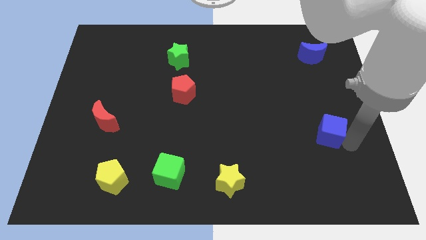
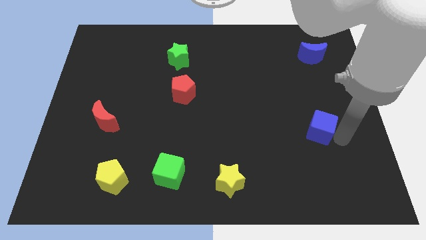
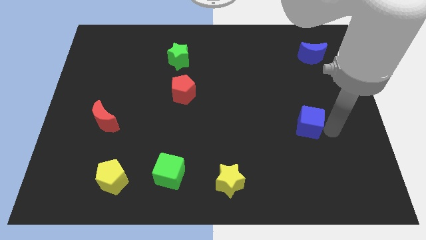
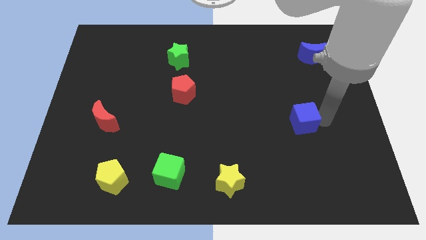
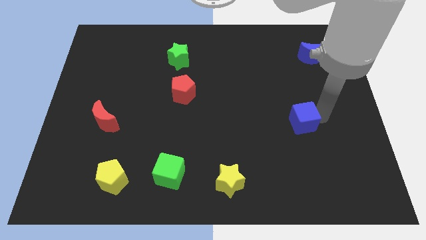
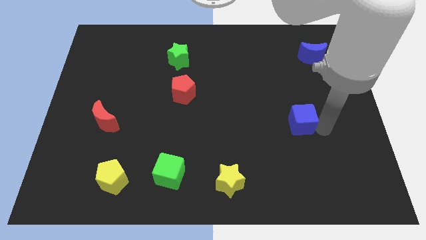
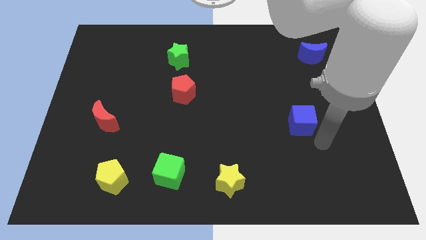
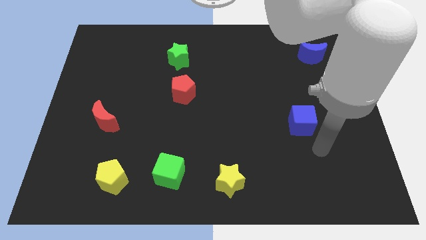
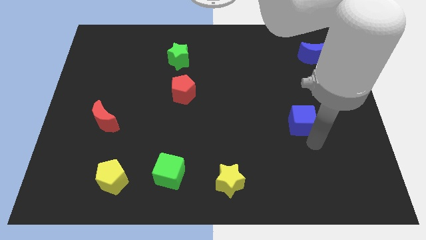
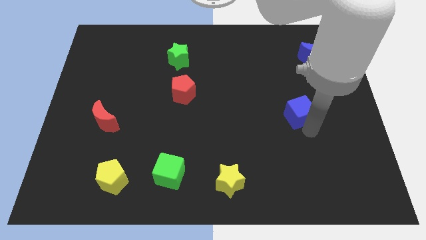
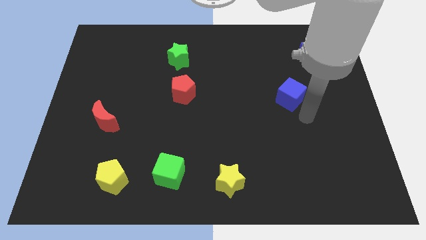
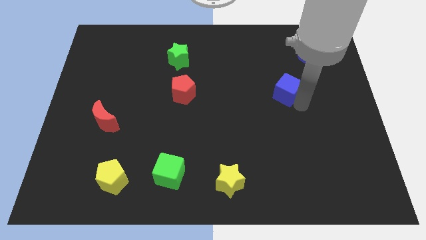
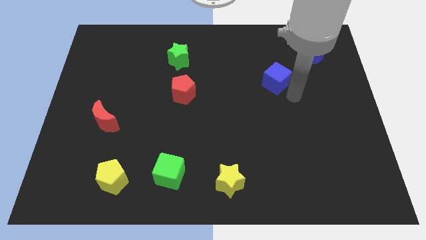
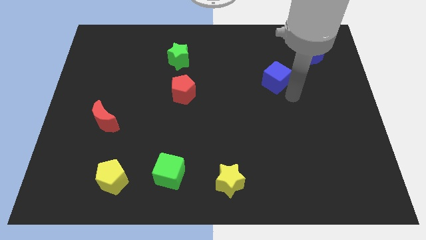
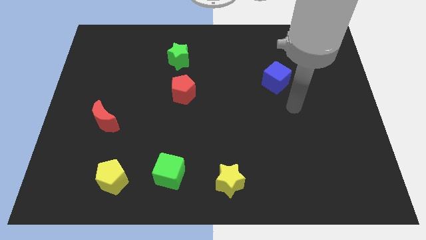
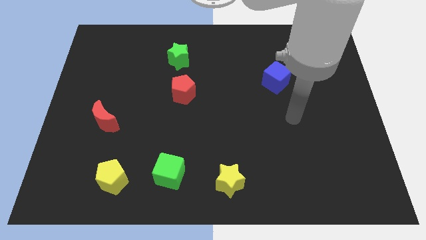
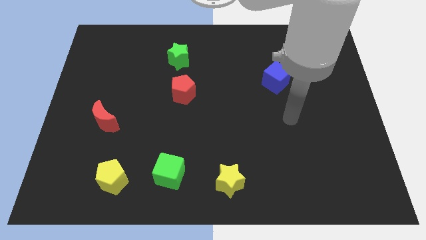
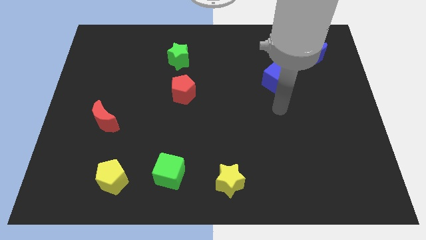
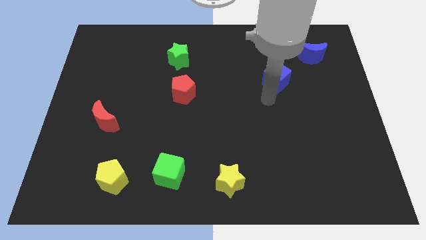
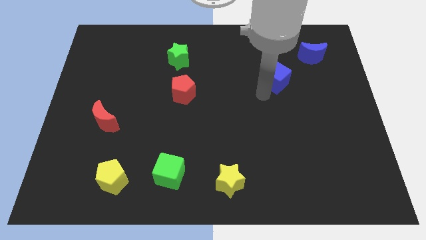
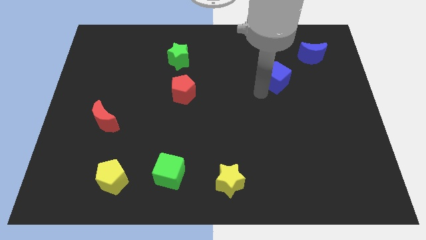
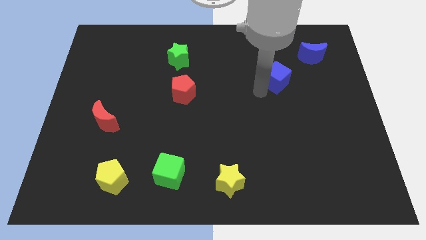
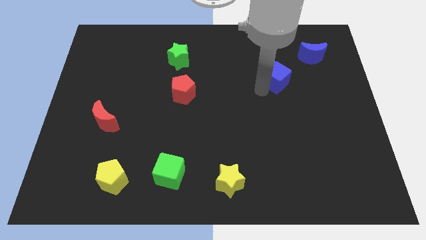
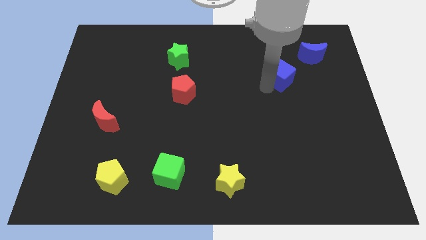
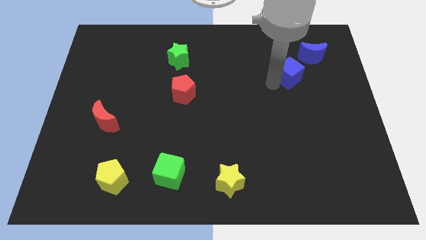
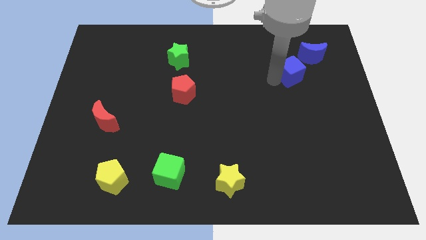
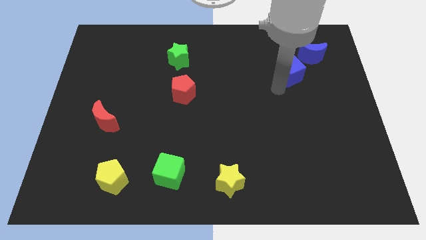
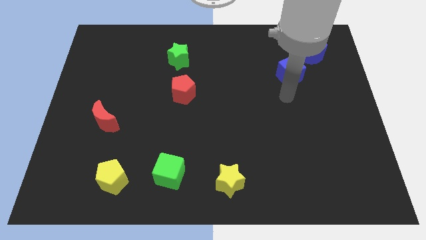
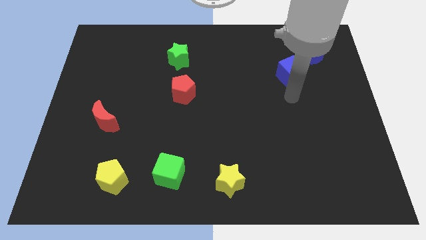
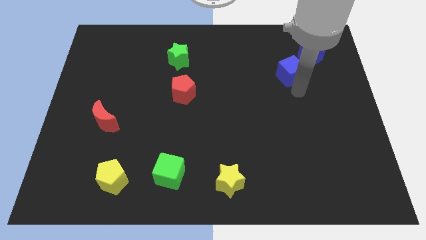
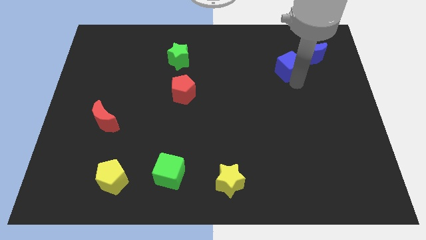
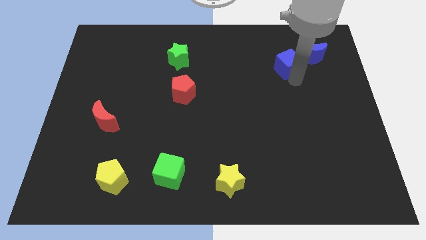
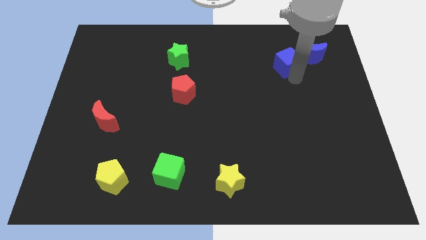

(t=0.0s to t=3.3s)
push the blue cube diagonally top right to the red pentagon

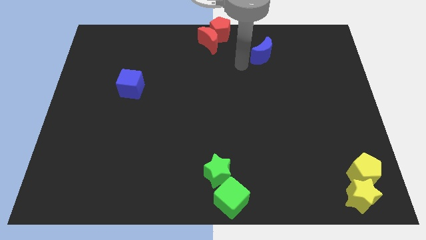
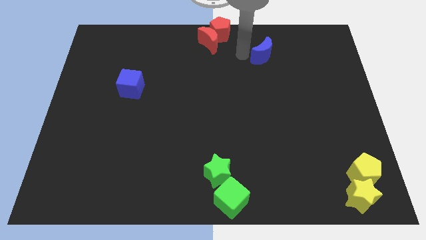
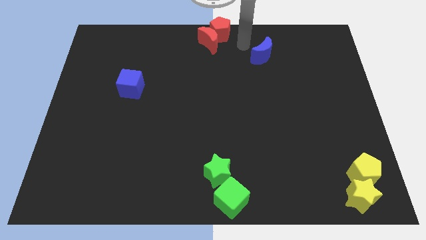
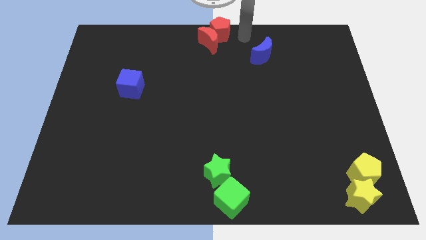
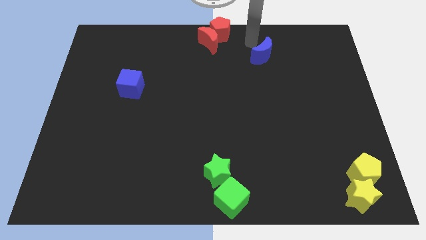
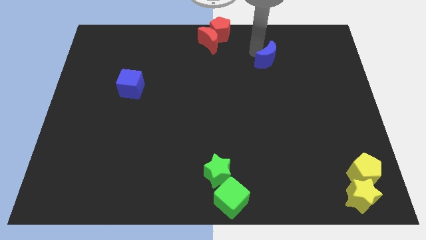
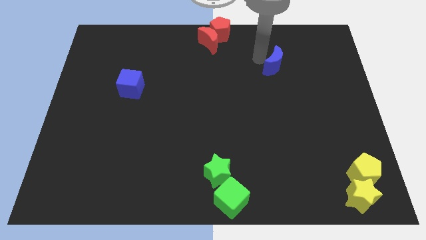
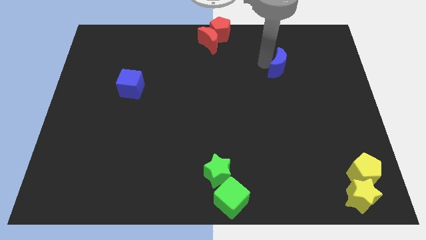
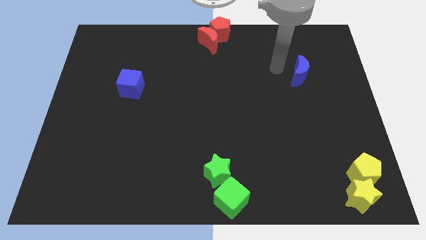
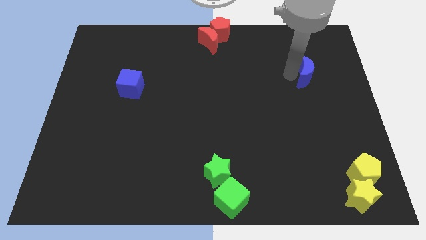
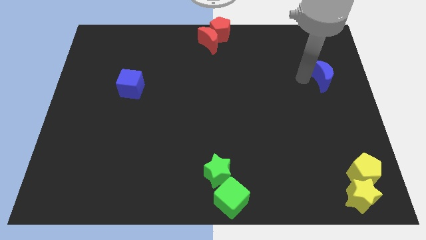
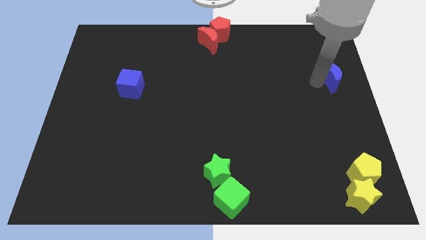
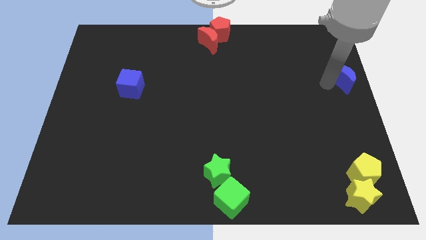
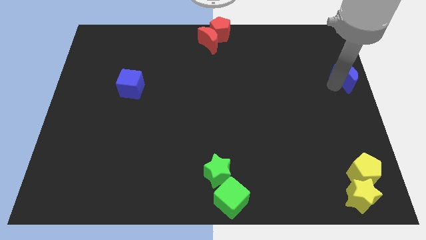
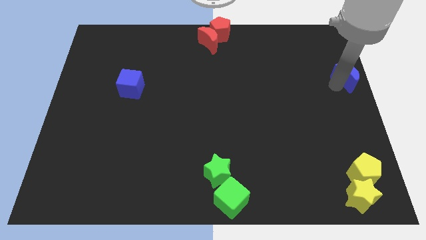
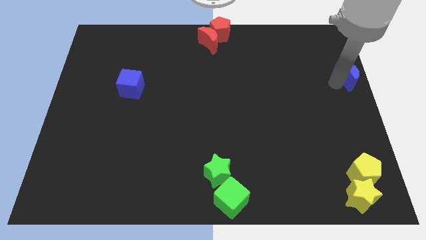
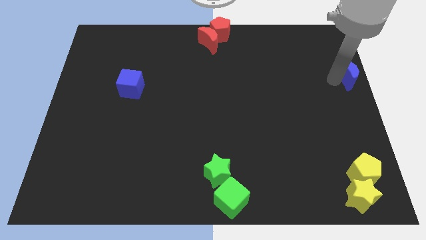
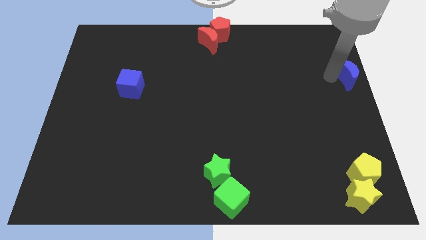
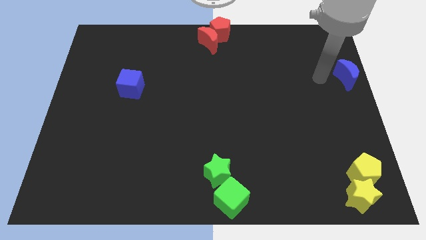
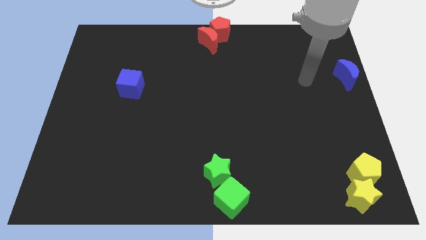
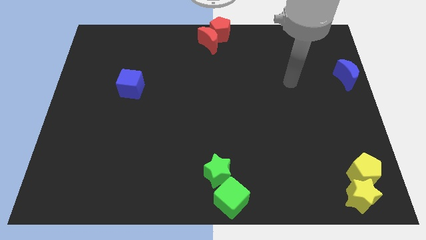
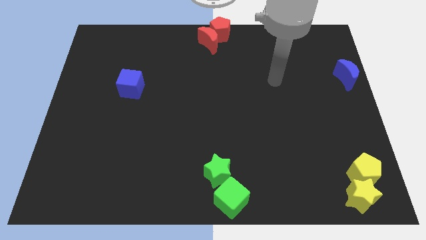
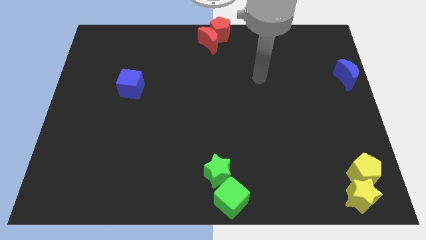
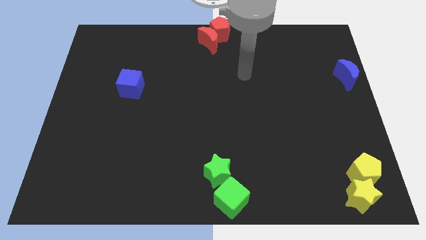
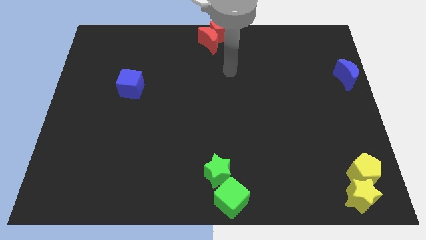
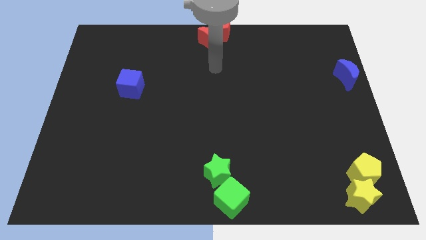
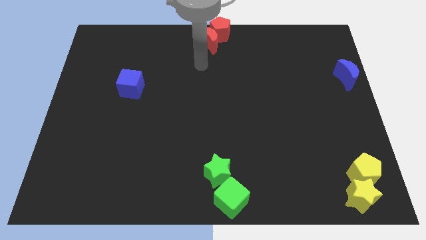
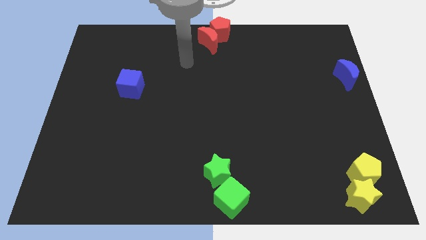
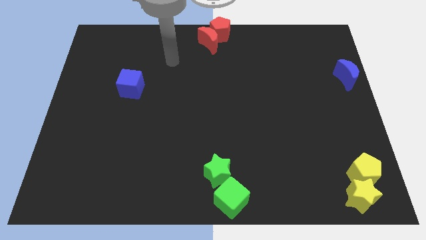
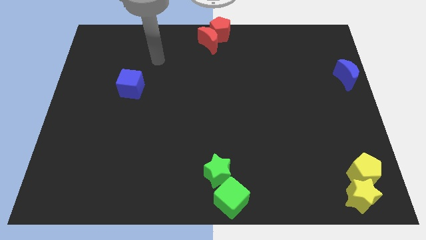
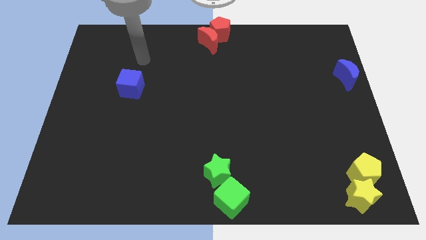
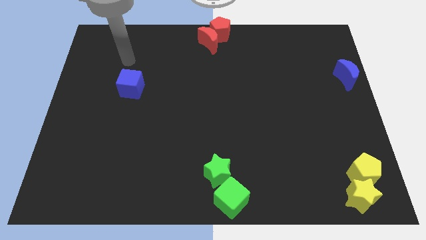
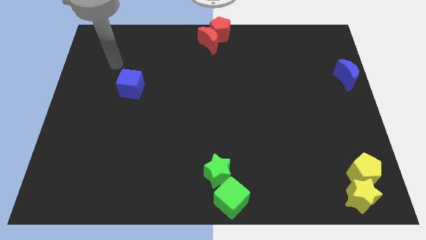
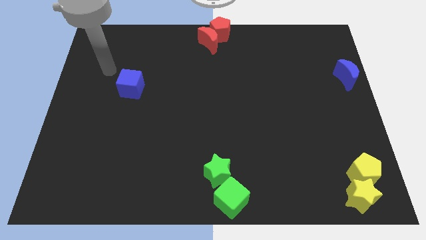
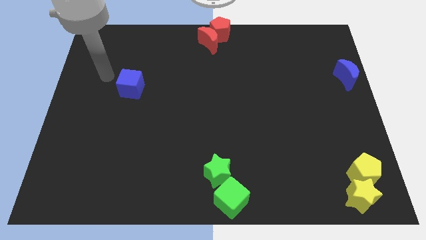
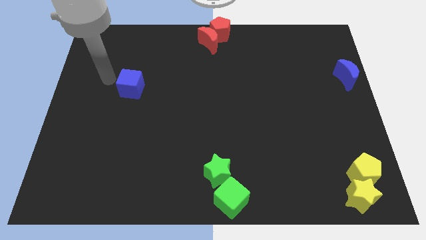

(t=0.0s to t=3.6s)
slide the blue moon to the center right

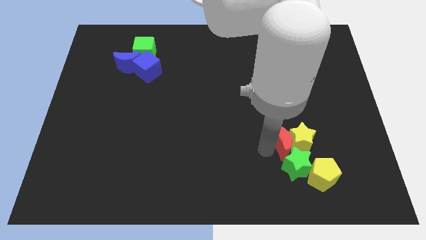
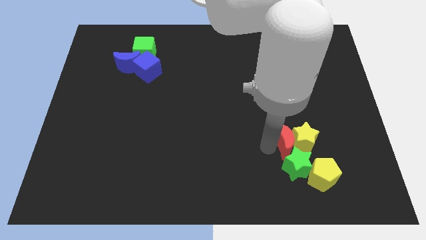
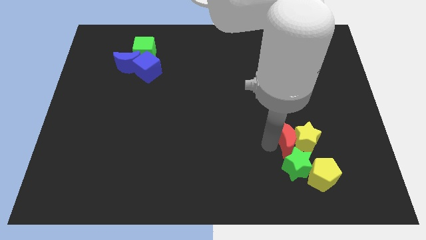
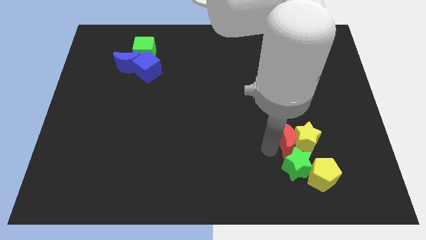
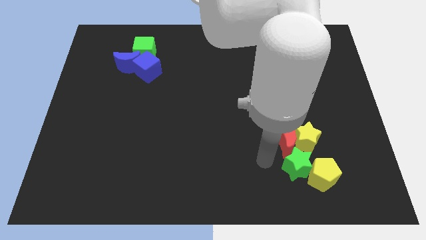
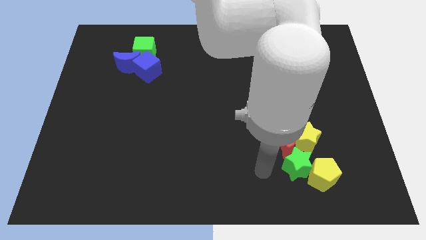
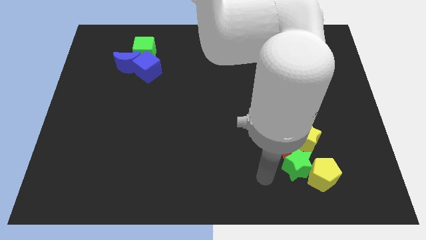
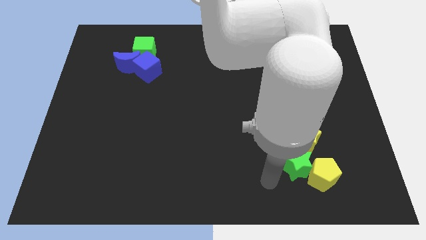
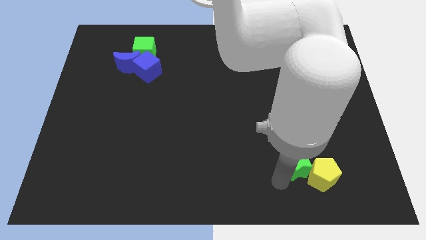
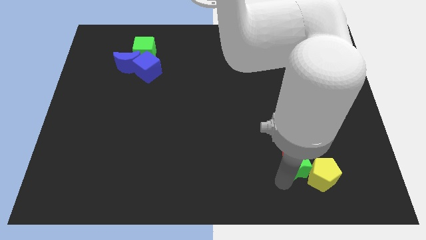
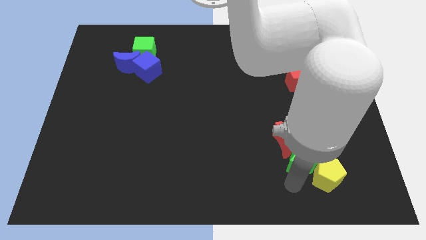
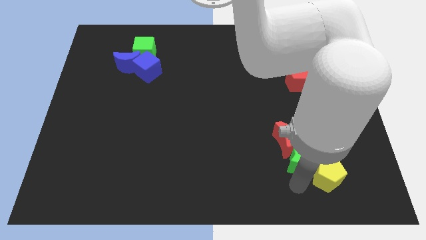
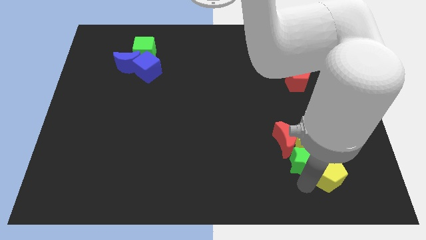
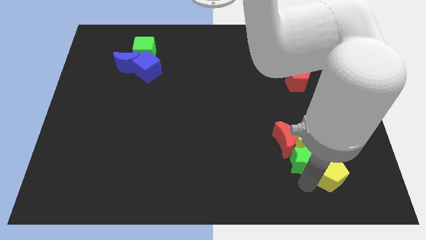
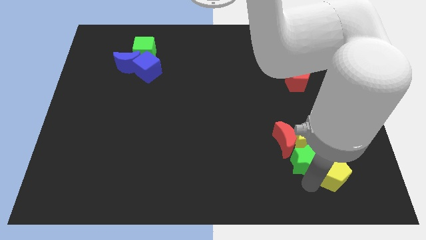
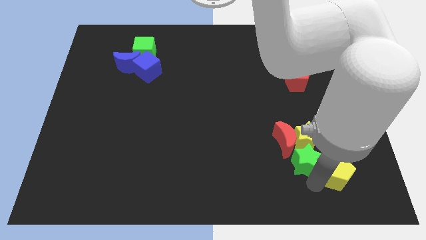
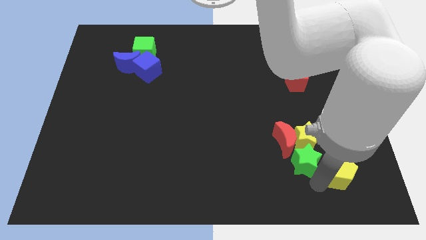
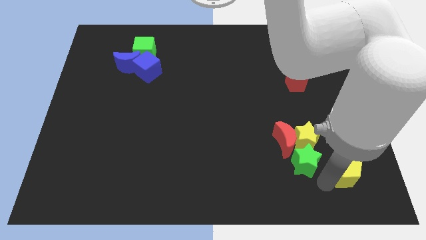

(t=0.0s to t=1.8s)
slightly push yellow pentagon towards right side of the board

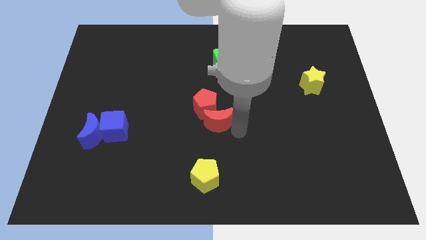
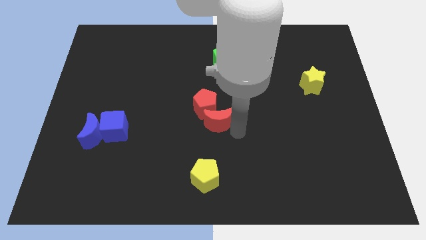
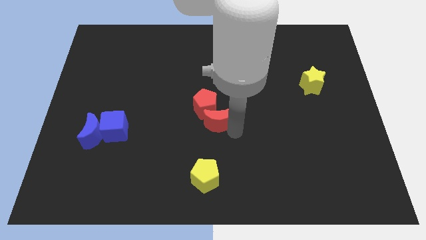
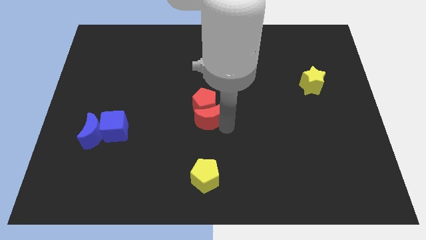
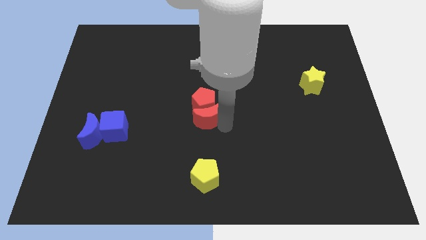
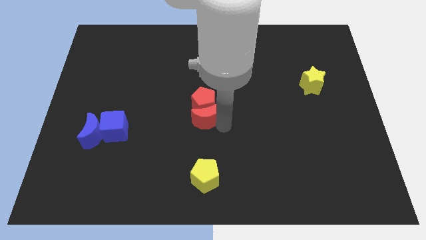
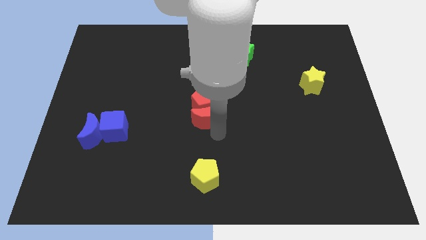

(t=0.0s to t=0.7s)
slightly move the red crescent into the red pentagon
